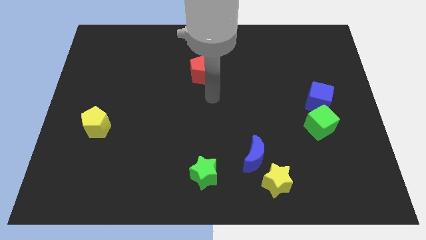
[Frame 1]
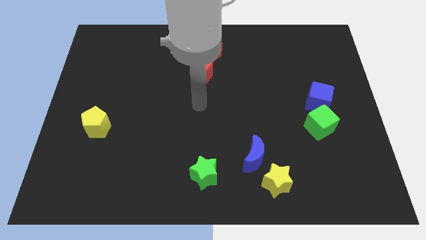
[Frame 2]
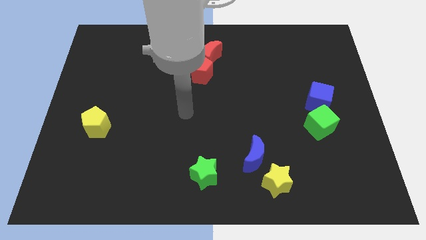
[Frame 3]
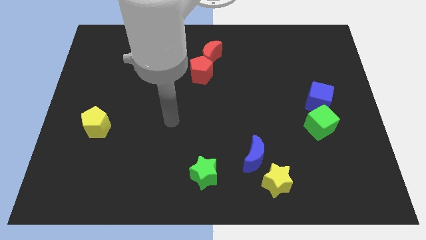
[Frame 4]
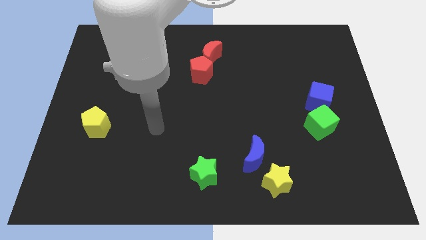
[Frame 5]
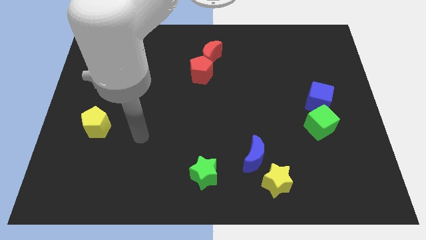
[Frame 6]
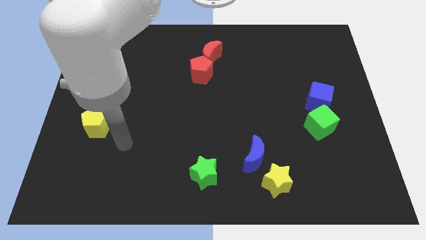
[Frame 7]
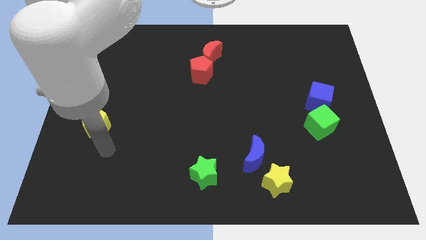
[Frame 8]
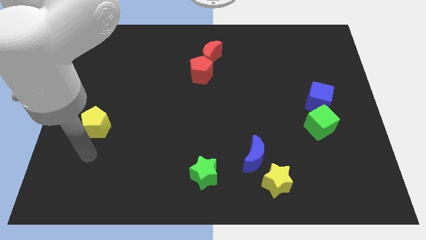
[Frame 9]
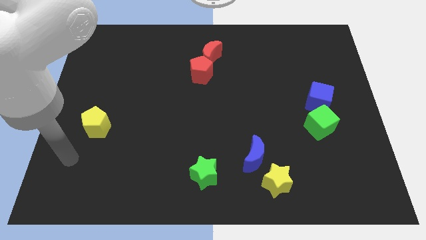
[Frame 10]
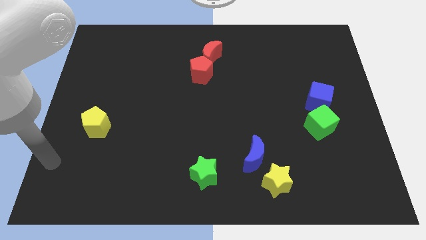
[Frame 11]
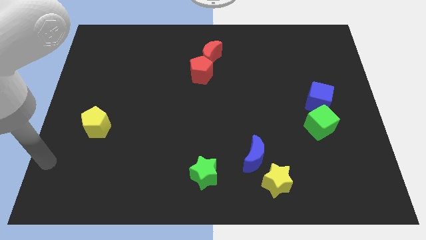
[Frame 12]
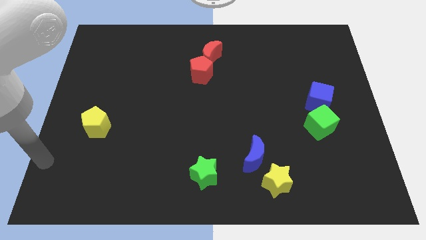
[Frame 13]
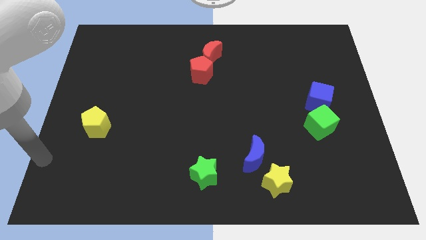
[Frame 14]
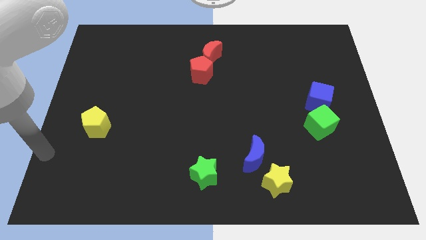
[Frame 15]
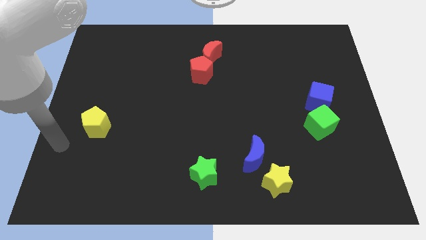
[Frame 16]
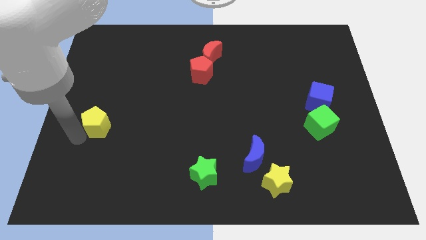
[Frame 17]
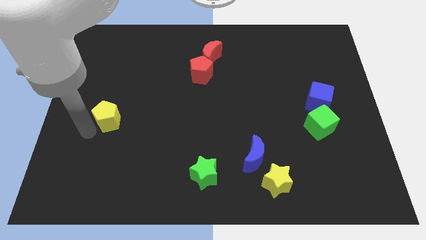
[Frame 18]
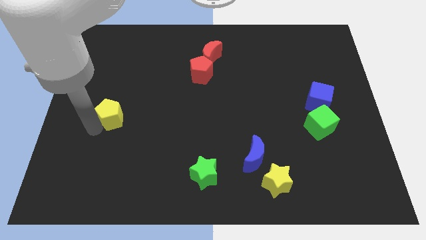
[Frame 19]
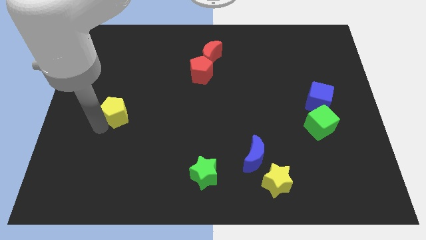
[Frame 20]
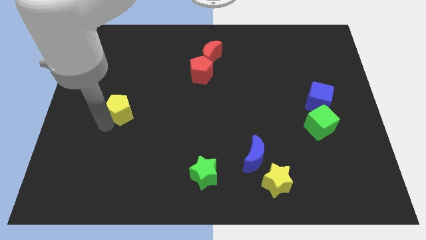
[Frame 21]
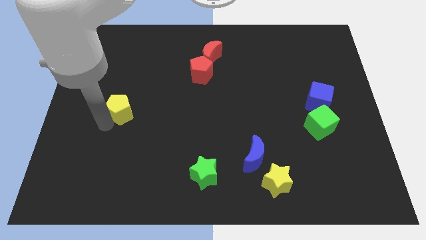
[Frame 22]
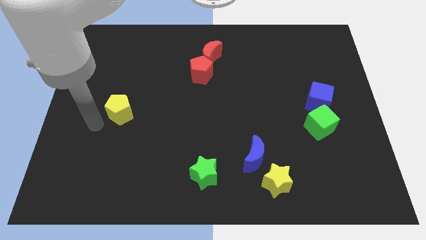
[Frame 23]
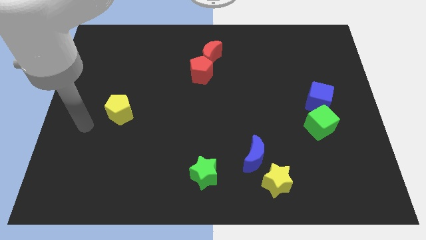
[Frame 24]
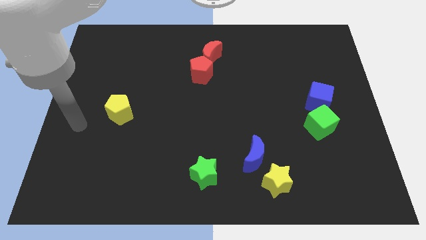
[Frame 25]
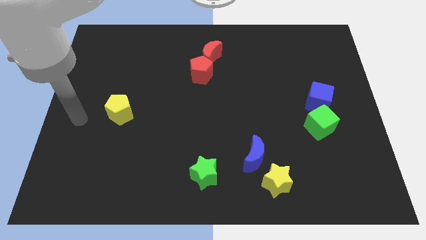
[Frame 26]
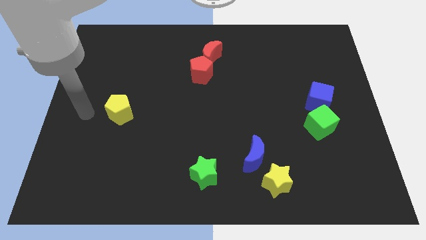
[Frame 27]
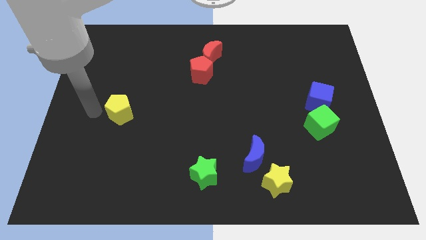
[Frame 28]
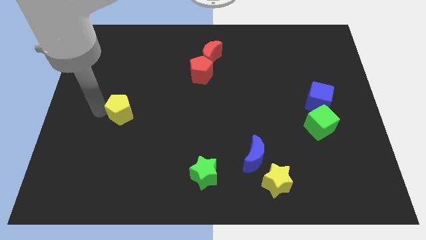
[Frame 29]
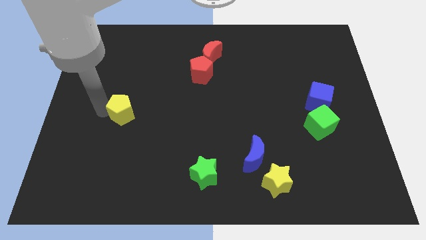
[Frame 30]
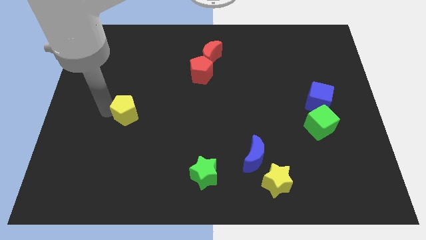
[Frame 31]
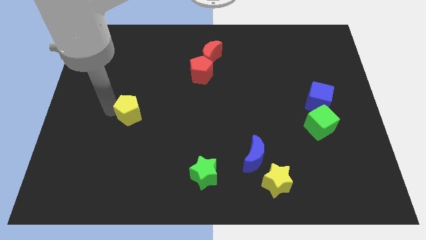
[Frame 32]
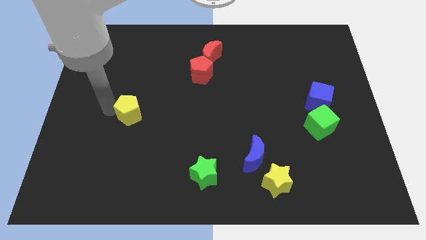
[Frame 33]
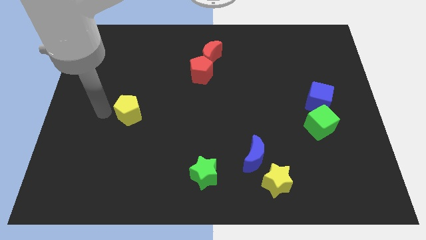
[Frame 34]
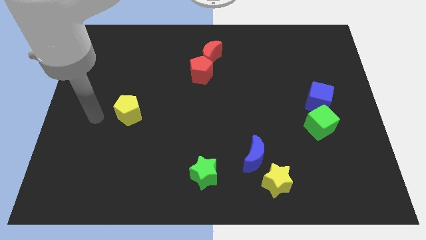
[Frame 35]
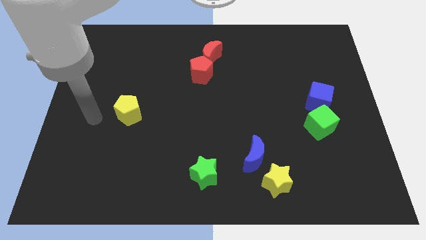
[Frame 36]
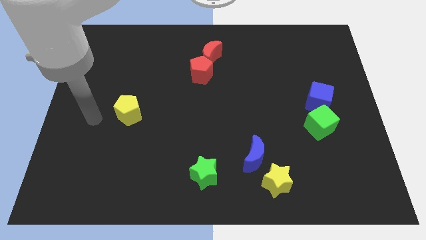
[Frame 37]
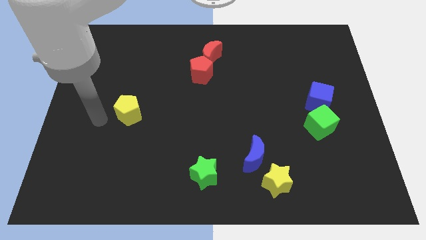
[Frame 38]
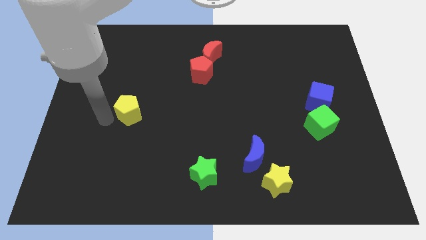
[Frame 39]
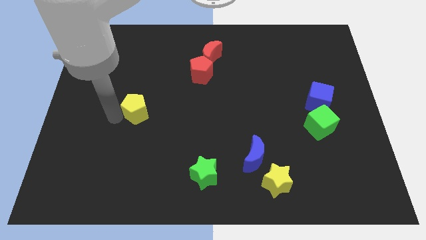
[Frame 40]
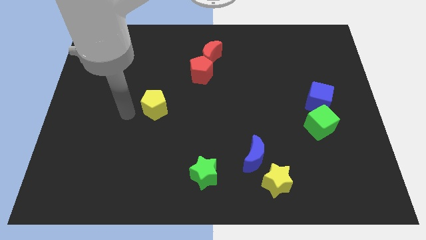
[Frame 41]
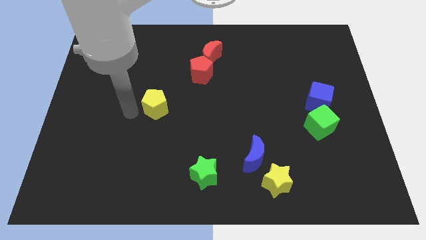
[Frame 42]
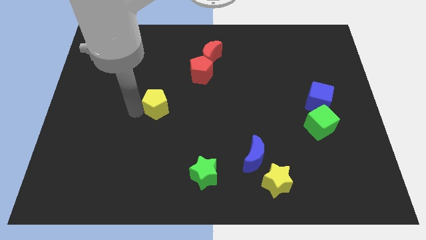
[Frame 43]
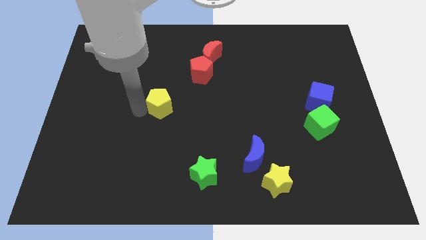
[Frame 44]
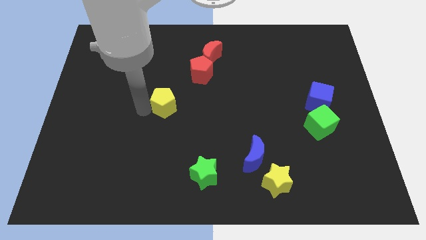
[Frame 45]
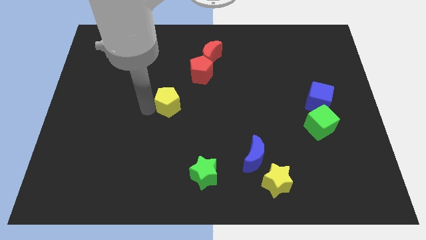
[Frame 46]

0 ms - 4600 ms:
place the yellow pentagon diagonally top left to the green star

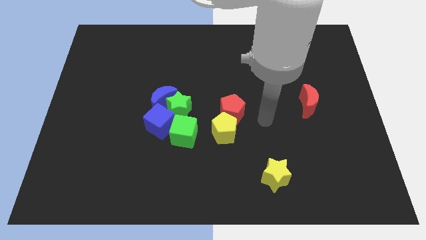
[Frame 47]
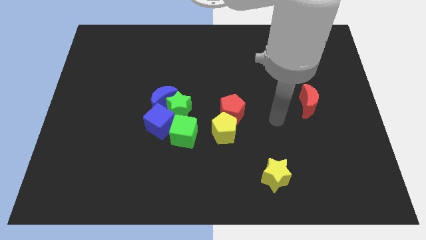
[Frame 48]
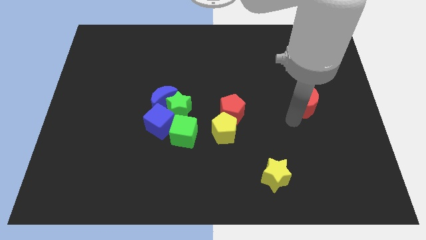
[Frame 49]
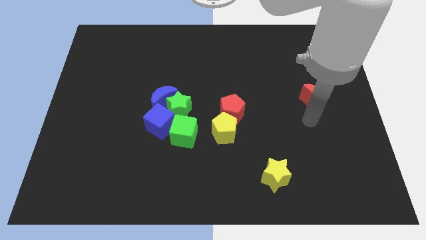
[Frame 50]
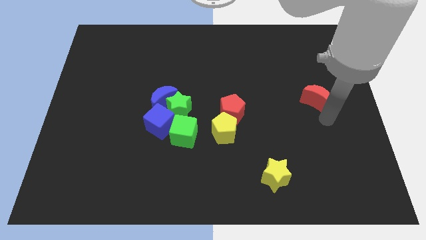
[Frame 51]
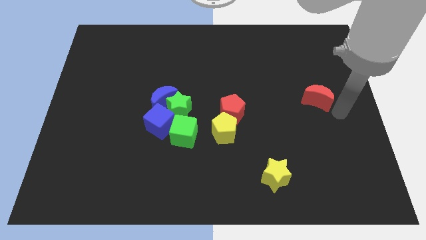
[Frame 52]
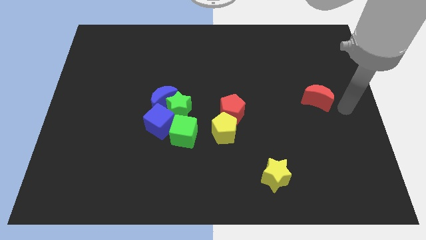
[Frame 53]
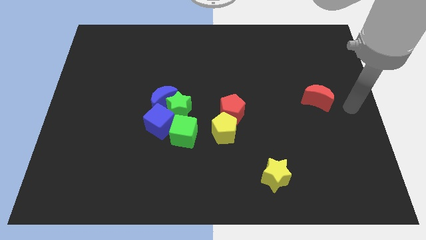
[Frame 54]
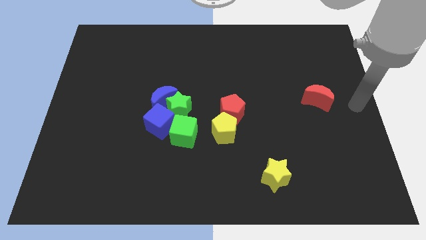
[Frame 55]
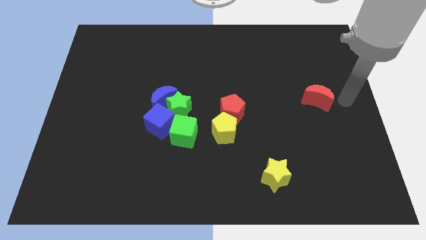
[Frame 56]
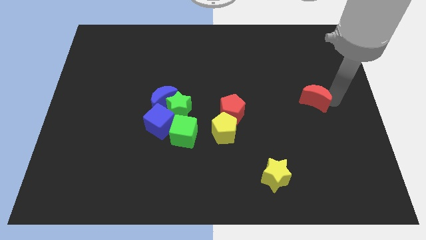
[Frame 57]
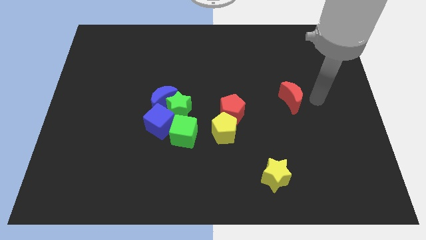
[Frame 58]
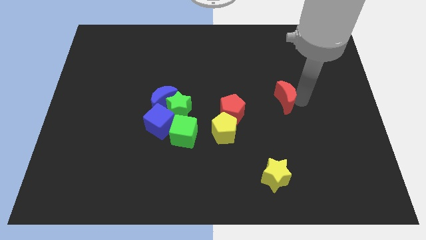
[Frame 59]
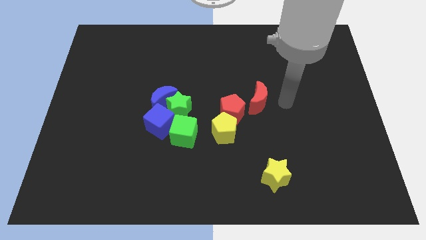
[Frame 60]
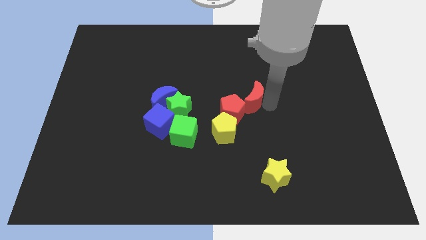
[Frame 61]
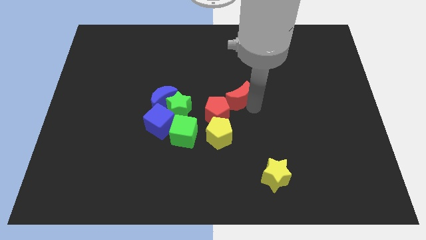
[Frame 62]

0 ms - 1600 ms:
push the red crescent to the top right side of the red pentagon

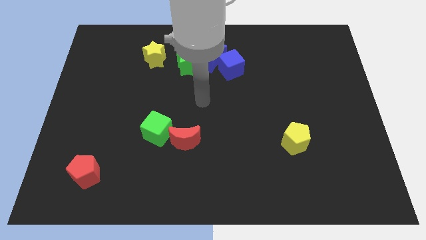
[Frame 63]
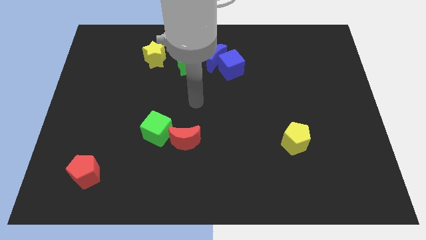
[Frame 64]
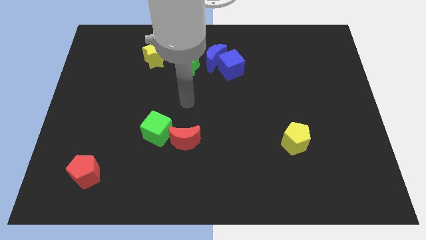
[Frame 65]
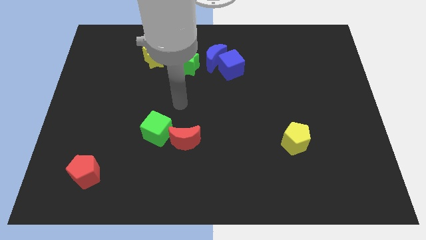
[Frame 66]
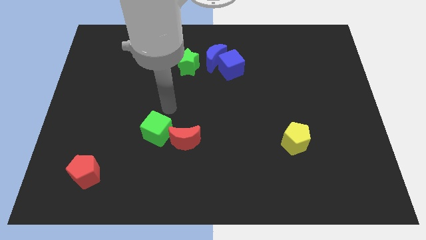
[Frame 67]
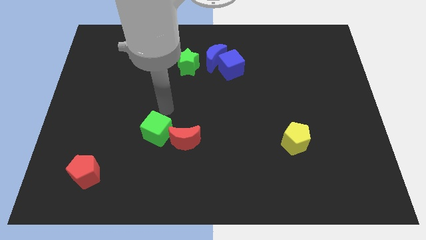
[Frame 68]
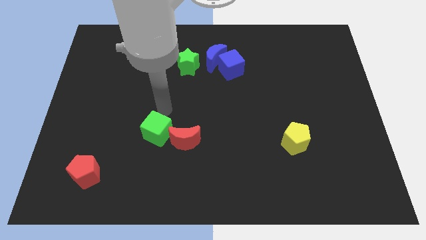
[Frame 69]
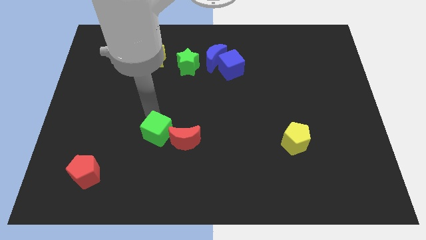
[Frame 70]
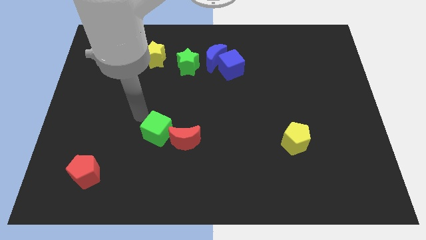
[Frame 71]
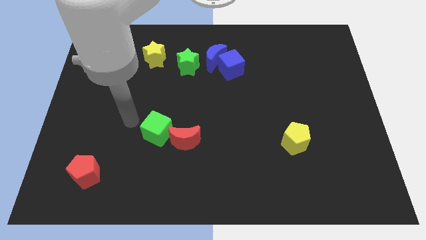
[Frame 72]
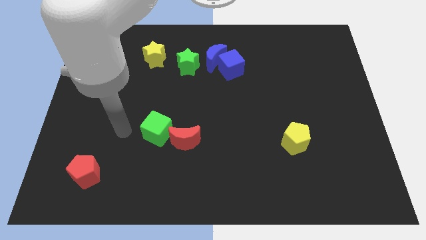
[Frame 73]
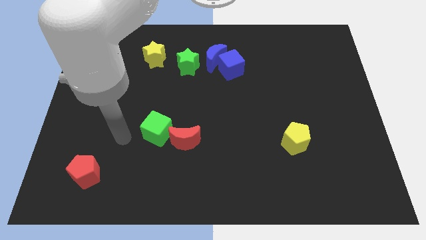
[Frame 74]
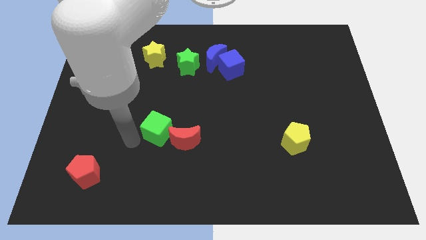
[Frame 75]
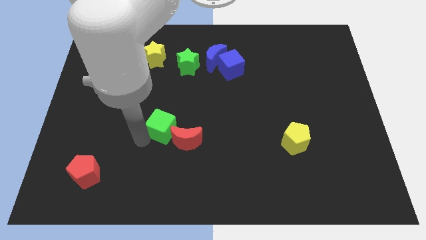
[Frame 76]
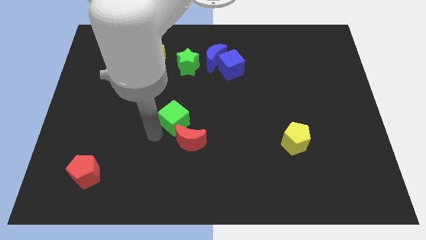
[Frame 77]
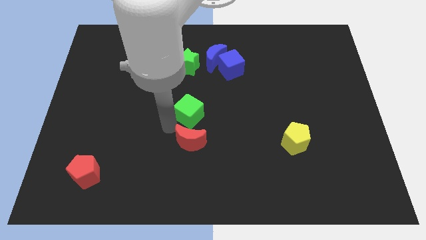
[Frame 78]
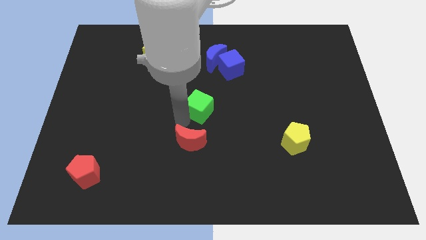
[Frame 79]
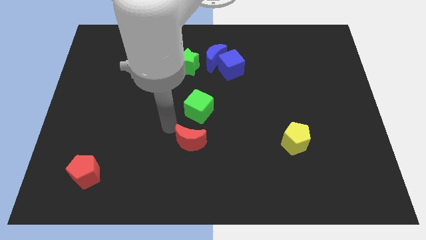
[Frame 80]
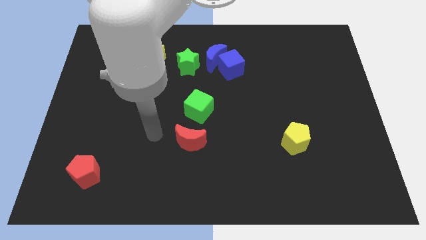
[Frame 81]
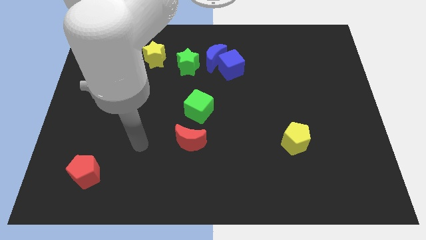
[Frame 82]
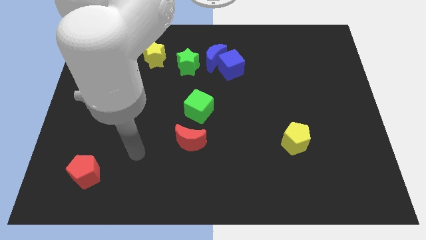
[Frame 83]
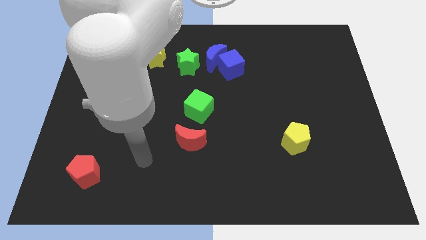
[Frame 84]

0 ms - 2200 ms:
separate the green cube and red crescent

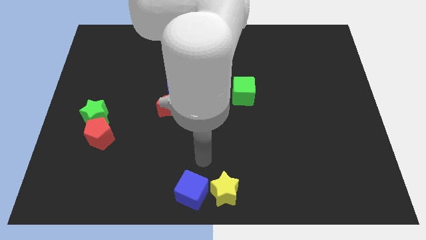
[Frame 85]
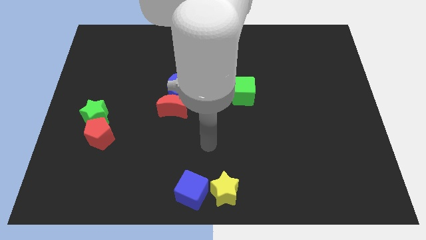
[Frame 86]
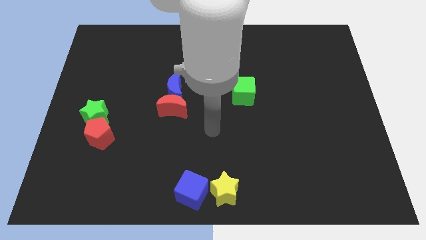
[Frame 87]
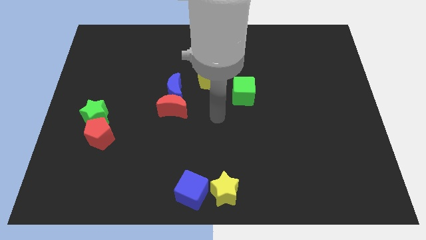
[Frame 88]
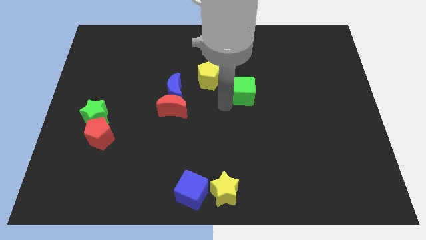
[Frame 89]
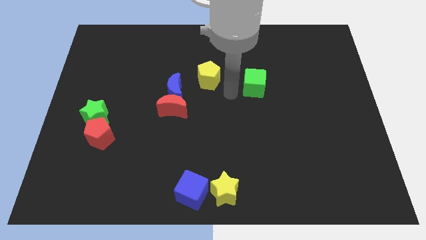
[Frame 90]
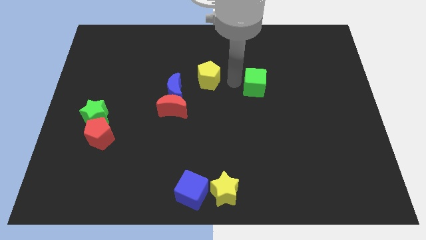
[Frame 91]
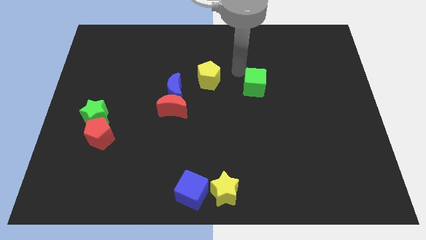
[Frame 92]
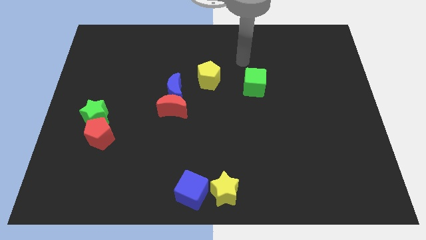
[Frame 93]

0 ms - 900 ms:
touch the green cube
